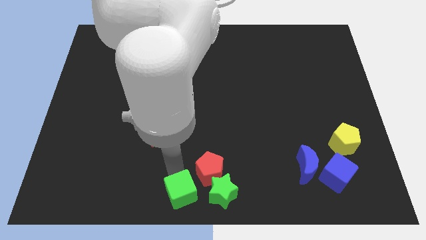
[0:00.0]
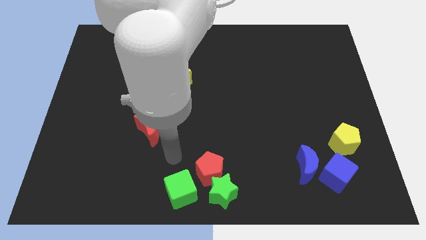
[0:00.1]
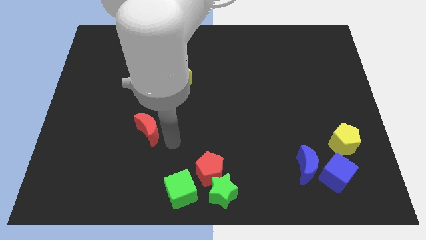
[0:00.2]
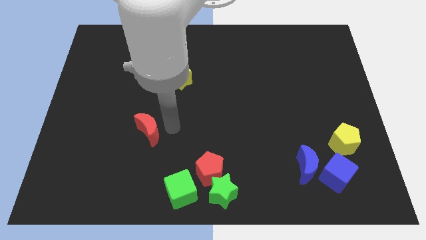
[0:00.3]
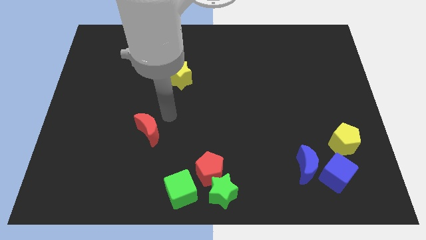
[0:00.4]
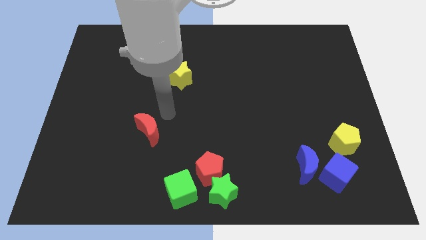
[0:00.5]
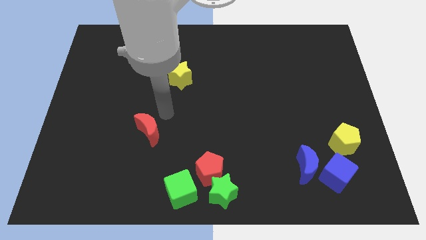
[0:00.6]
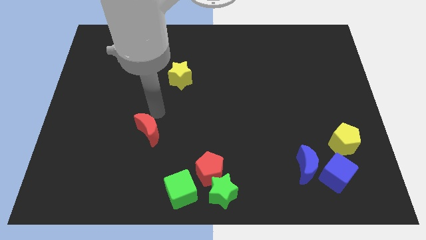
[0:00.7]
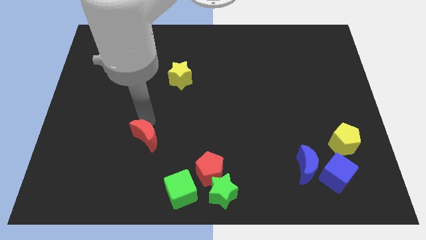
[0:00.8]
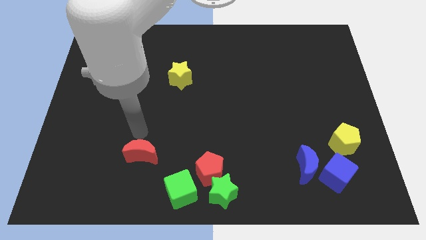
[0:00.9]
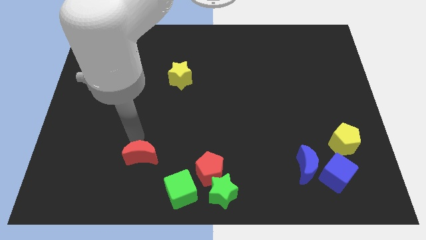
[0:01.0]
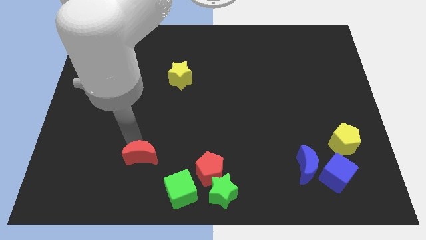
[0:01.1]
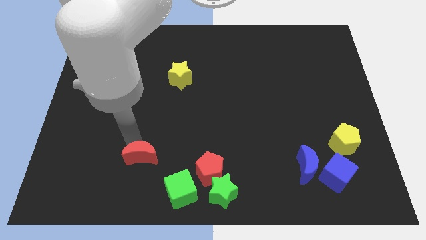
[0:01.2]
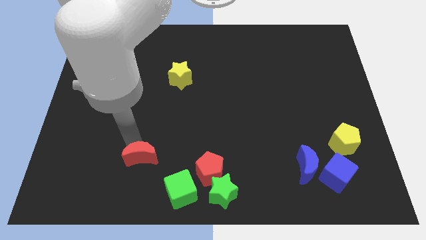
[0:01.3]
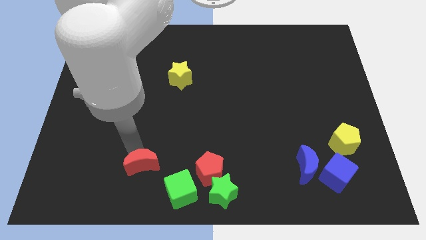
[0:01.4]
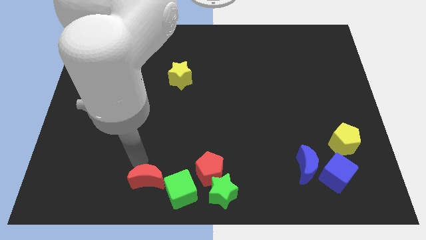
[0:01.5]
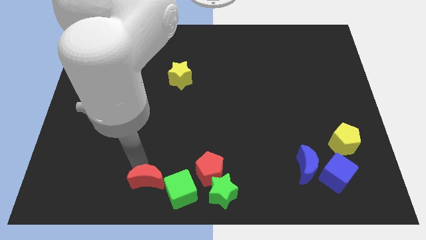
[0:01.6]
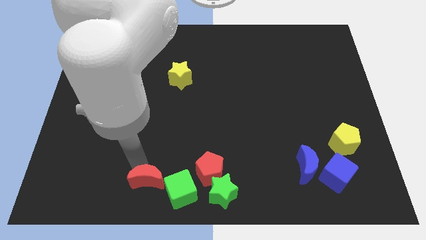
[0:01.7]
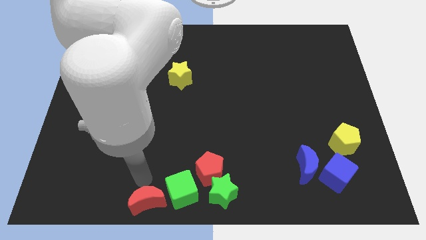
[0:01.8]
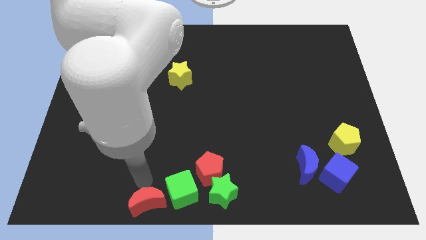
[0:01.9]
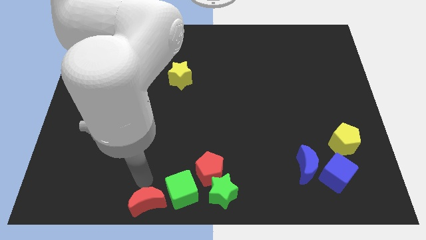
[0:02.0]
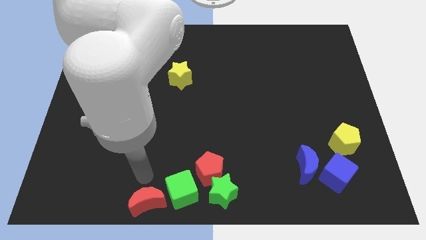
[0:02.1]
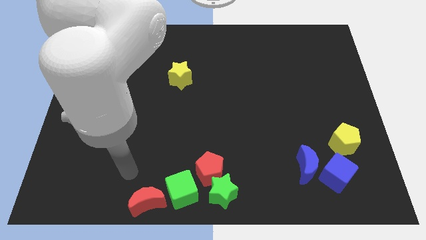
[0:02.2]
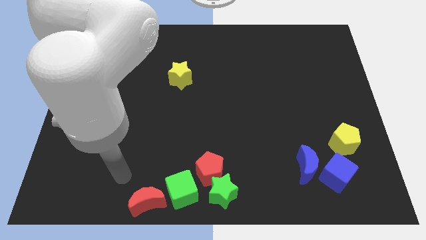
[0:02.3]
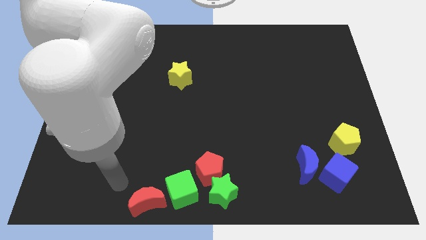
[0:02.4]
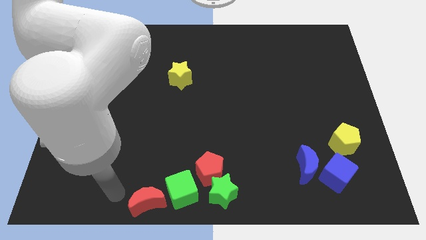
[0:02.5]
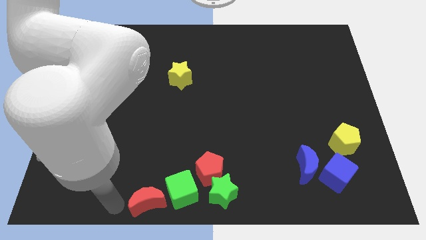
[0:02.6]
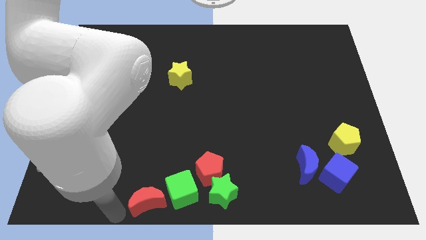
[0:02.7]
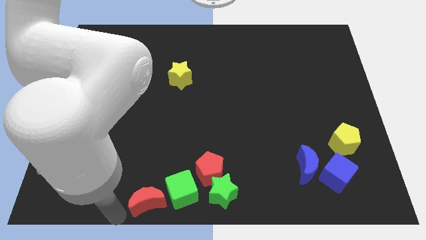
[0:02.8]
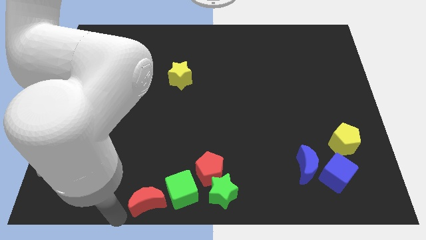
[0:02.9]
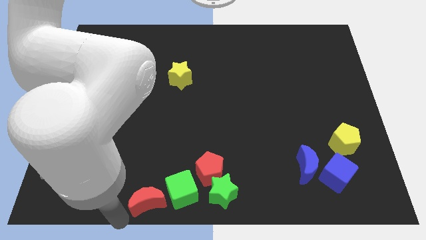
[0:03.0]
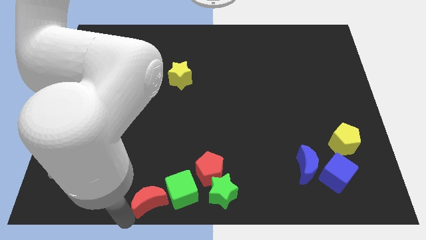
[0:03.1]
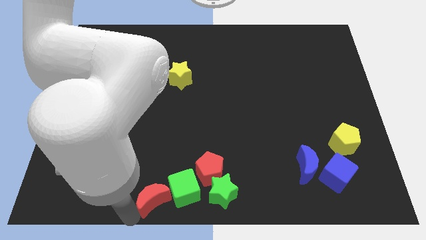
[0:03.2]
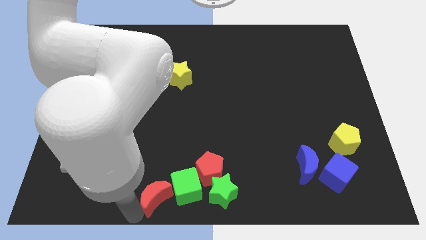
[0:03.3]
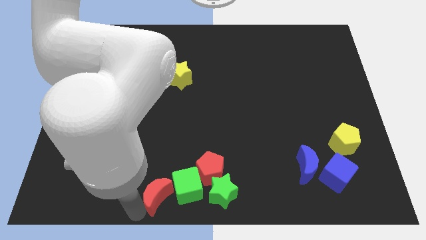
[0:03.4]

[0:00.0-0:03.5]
bring the red crescent into the left side of the green cube

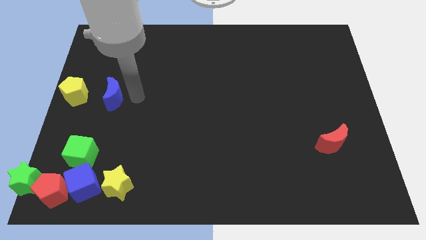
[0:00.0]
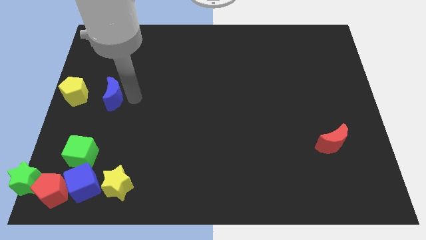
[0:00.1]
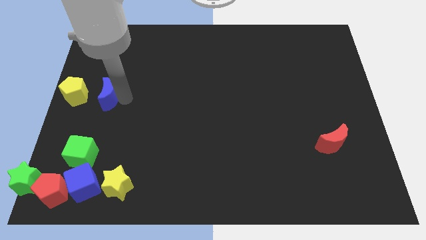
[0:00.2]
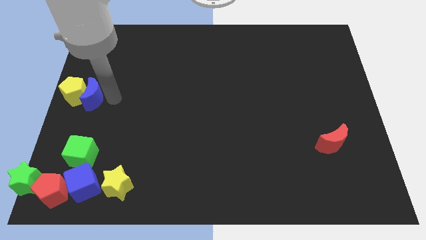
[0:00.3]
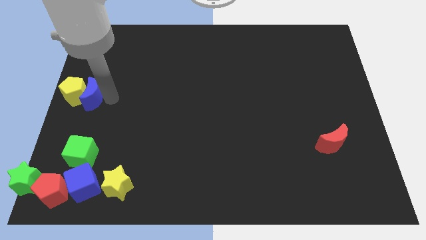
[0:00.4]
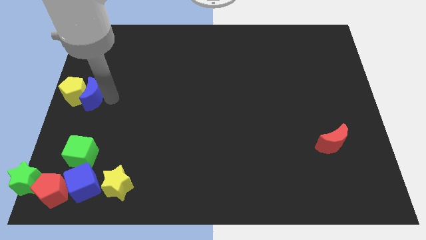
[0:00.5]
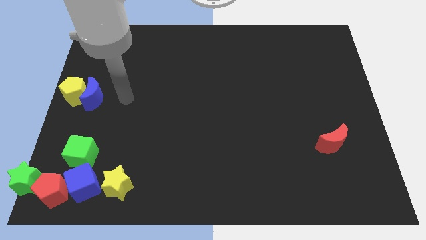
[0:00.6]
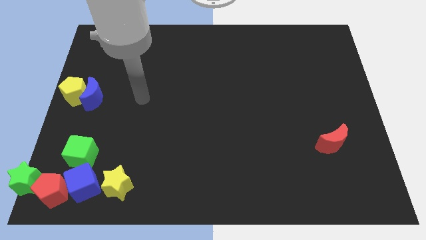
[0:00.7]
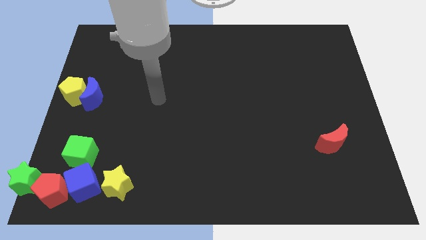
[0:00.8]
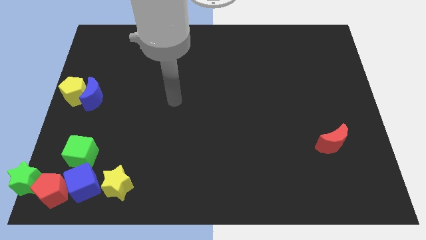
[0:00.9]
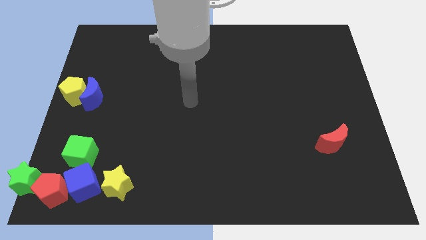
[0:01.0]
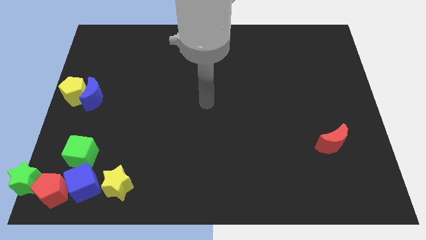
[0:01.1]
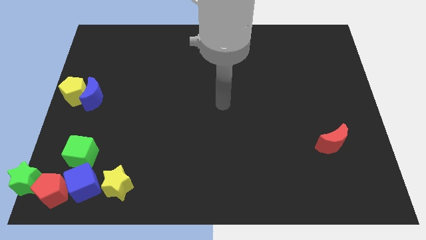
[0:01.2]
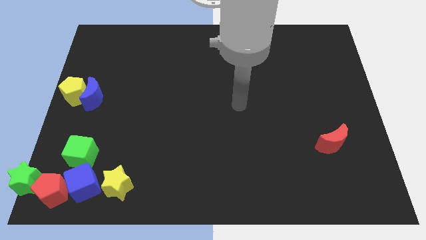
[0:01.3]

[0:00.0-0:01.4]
push the blue crescent to the right side of the yellow pentagon

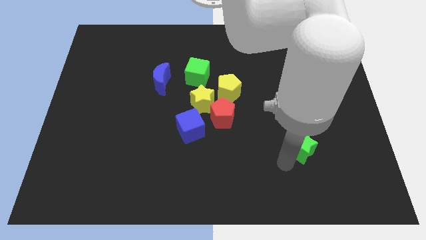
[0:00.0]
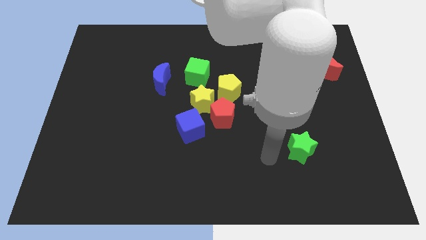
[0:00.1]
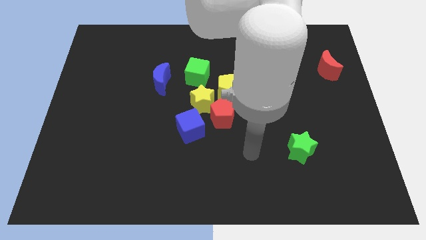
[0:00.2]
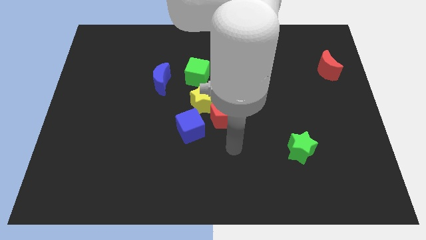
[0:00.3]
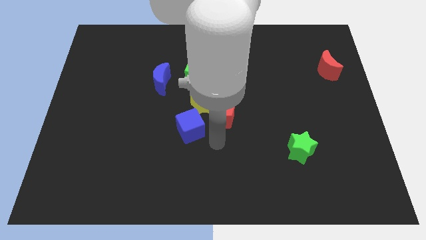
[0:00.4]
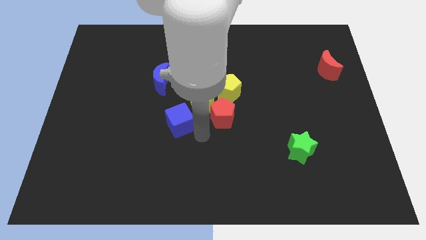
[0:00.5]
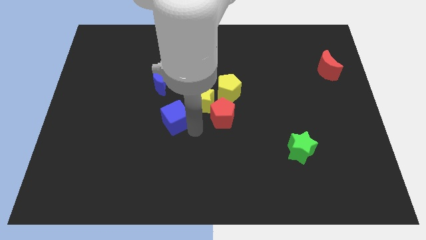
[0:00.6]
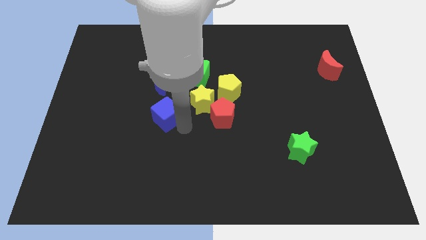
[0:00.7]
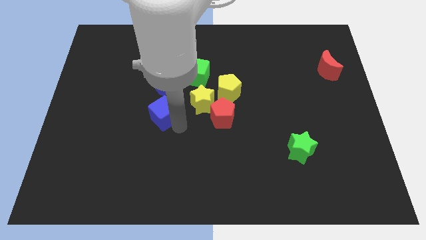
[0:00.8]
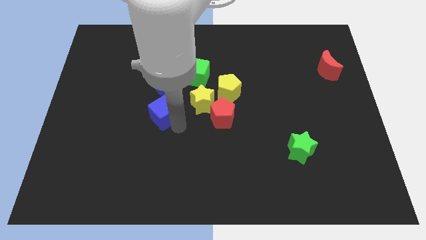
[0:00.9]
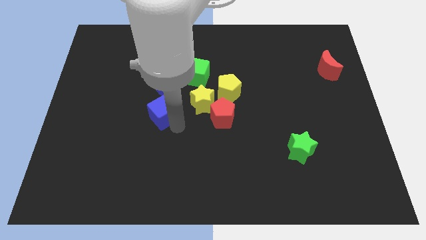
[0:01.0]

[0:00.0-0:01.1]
push the blue cube to the bottom of the blue crescent

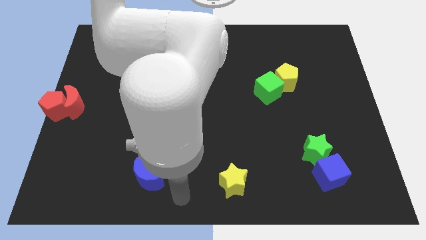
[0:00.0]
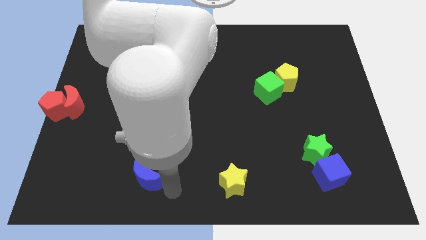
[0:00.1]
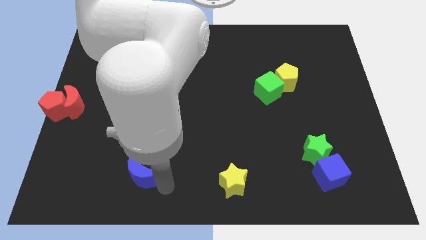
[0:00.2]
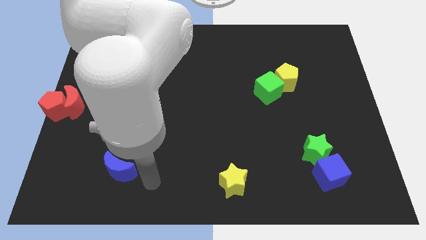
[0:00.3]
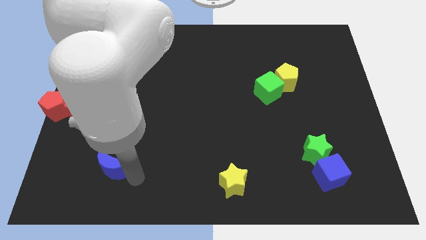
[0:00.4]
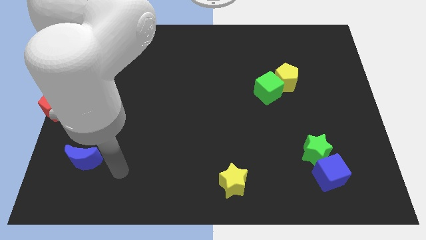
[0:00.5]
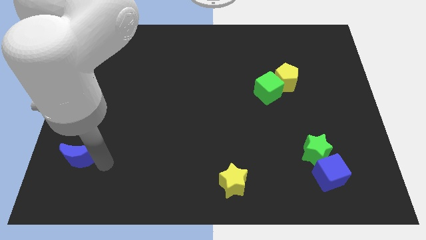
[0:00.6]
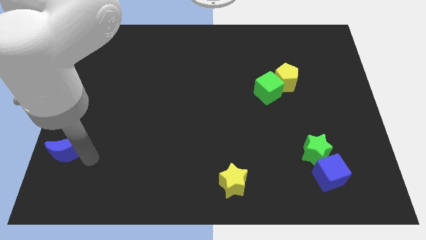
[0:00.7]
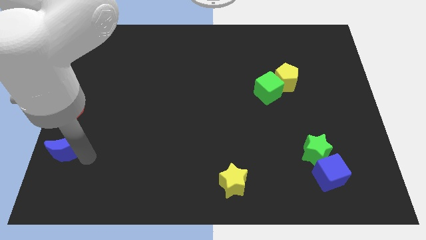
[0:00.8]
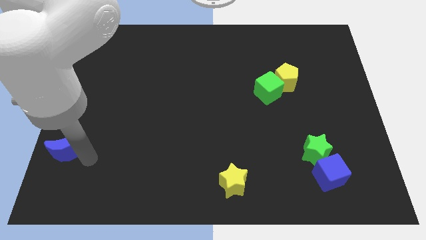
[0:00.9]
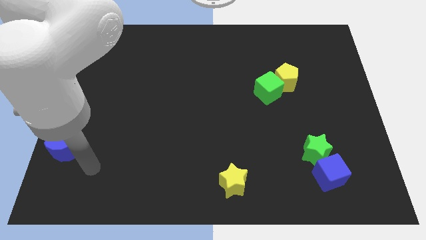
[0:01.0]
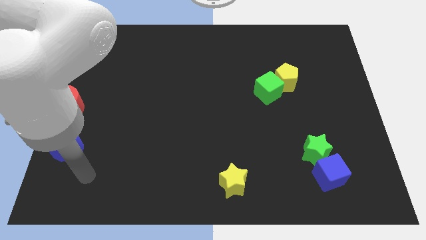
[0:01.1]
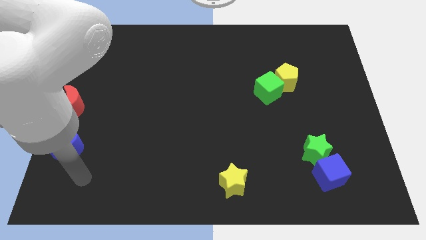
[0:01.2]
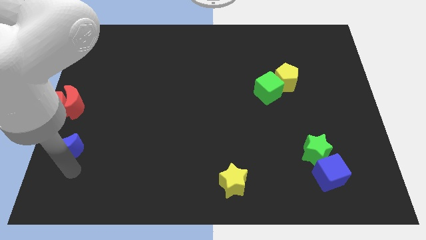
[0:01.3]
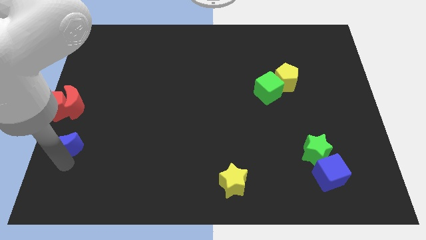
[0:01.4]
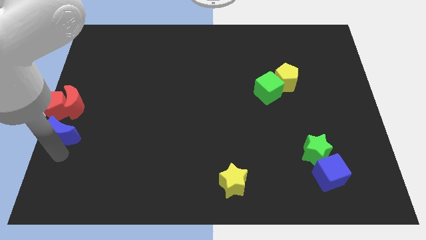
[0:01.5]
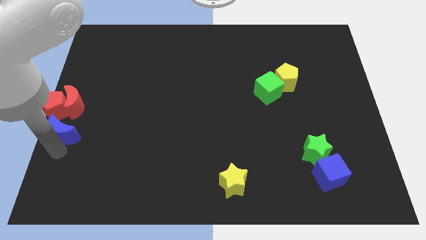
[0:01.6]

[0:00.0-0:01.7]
move blue crescent below red pentagon

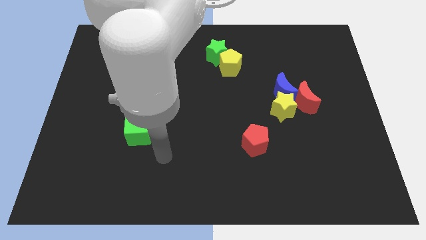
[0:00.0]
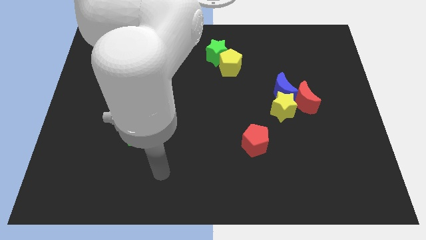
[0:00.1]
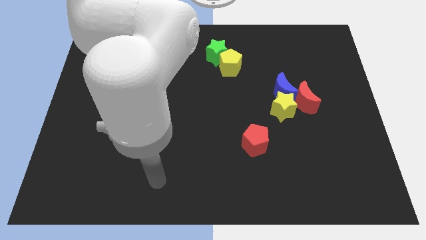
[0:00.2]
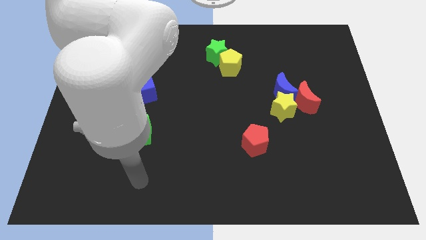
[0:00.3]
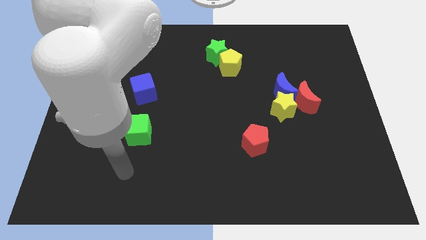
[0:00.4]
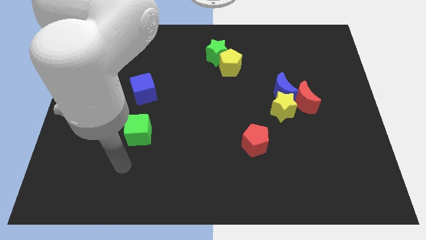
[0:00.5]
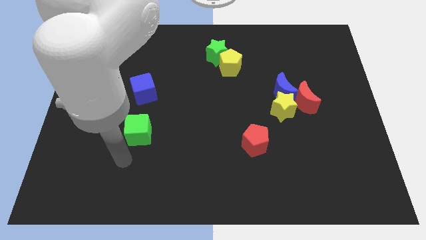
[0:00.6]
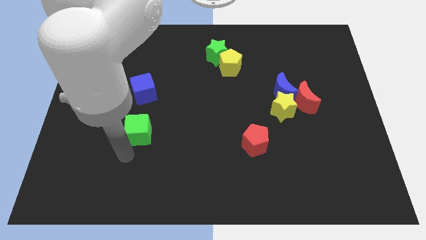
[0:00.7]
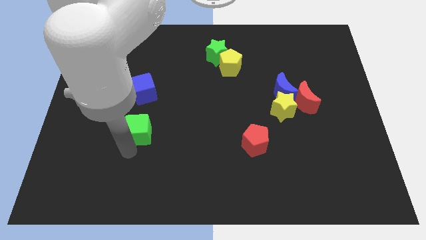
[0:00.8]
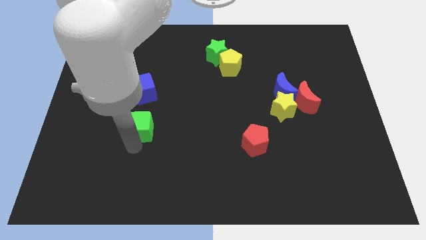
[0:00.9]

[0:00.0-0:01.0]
place the arm below the green cube
